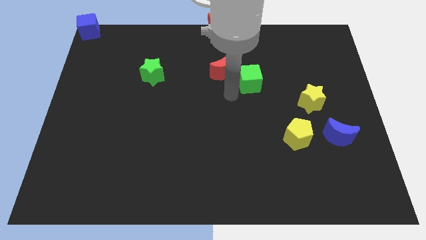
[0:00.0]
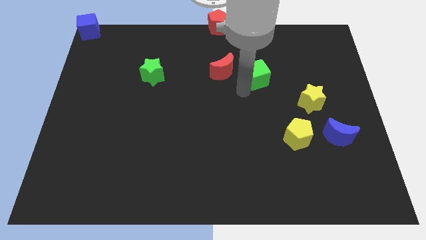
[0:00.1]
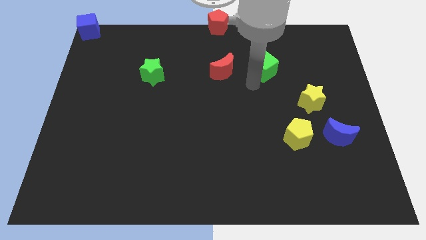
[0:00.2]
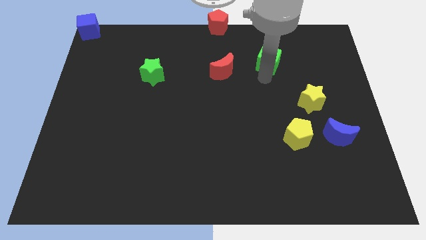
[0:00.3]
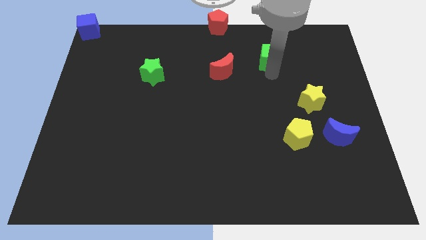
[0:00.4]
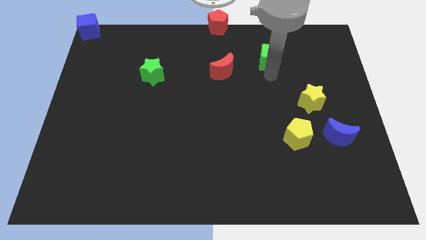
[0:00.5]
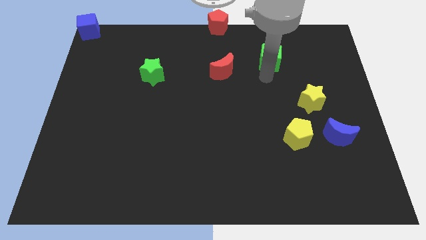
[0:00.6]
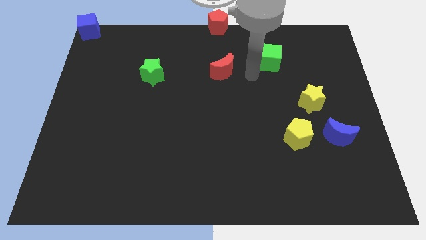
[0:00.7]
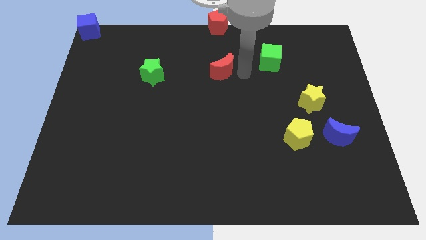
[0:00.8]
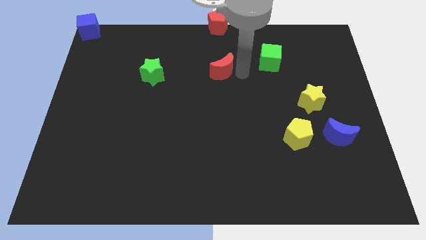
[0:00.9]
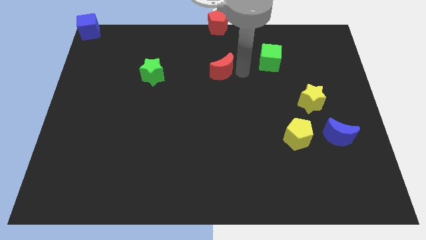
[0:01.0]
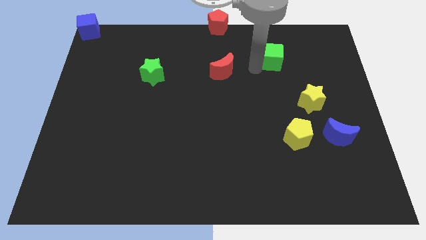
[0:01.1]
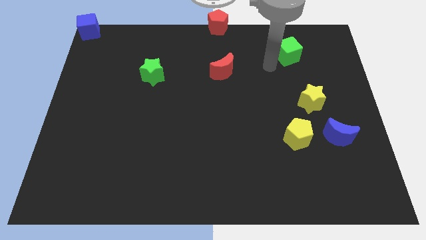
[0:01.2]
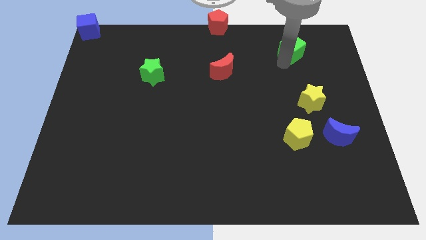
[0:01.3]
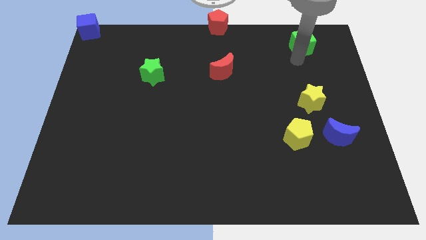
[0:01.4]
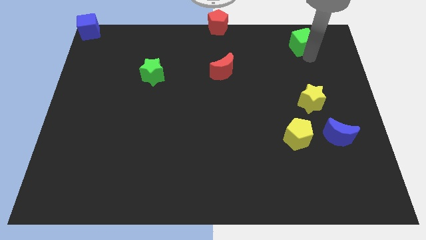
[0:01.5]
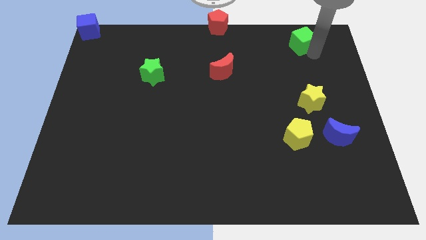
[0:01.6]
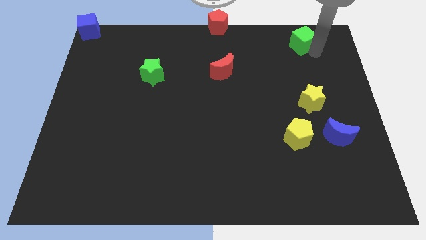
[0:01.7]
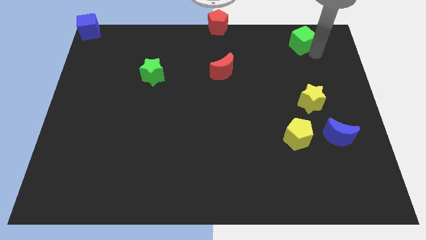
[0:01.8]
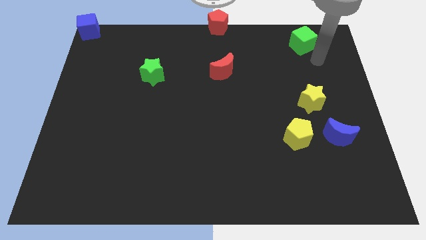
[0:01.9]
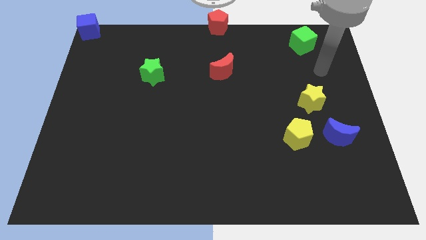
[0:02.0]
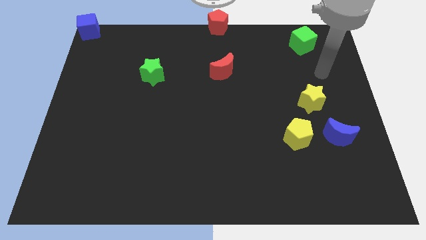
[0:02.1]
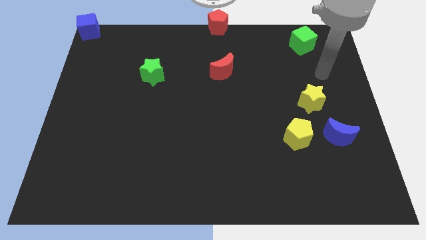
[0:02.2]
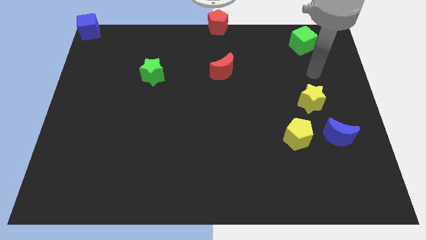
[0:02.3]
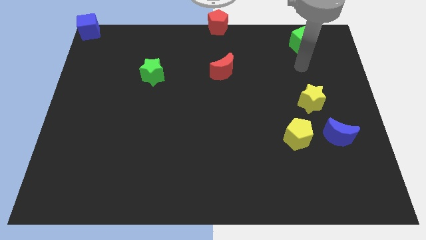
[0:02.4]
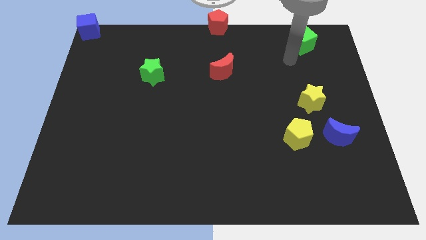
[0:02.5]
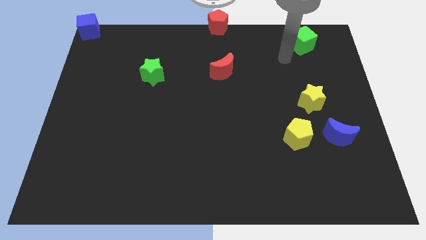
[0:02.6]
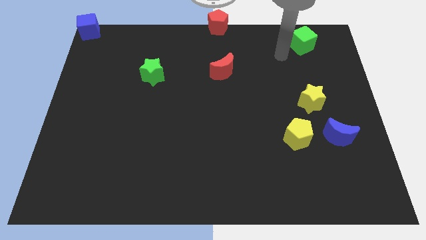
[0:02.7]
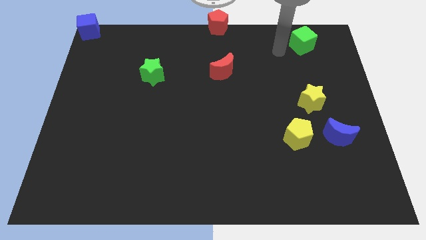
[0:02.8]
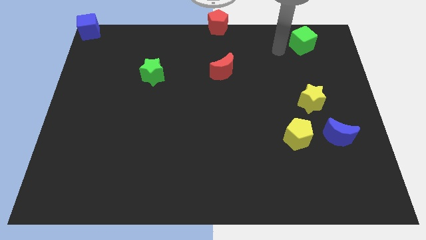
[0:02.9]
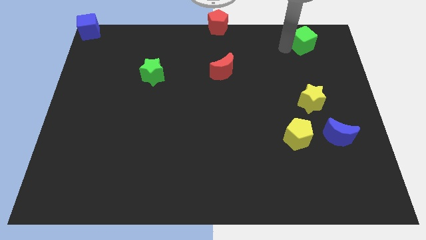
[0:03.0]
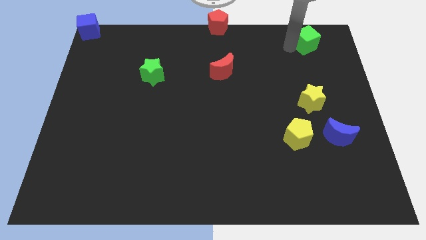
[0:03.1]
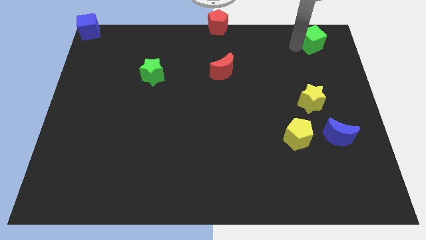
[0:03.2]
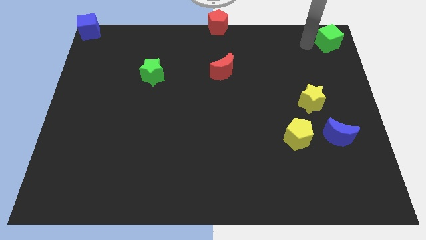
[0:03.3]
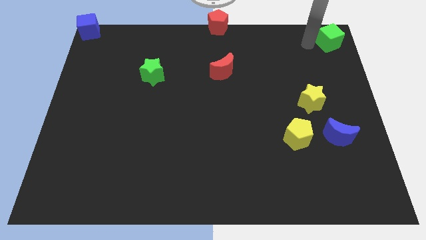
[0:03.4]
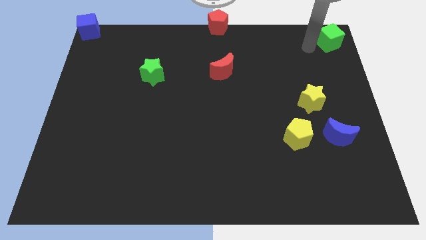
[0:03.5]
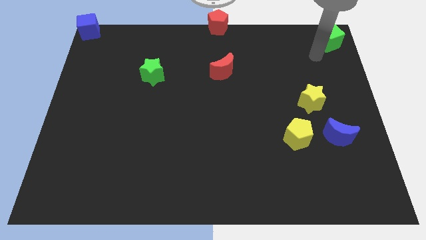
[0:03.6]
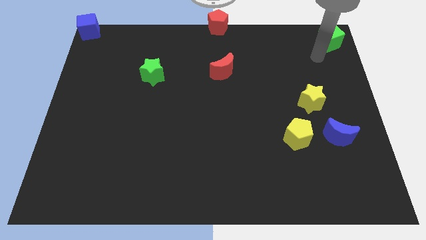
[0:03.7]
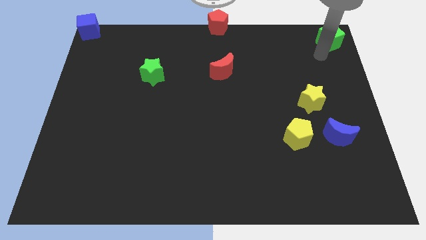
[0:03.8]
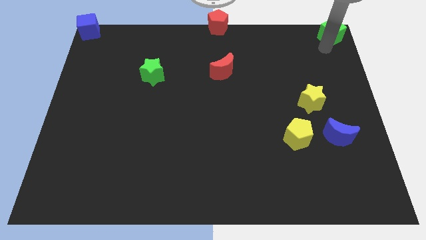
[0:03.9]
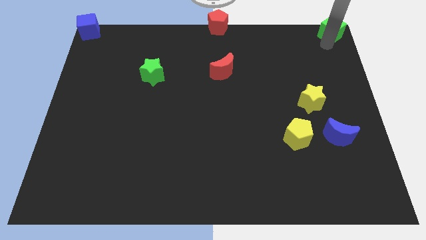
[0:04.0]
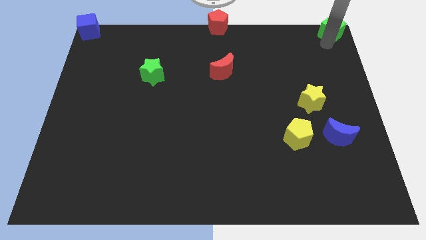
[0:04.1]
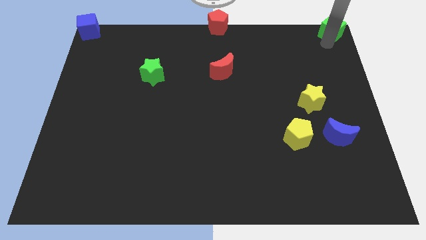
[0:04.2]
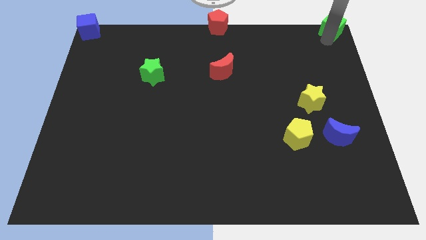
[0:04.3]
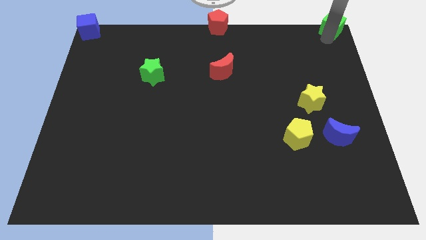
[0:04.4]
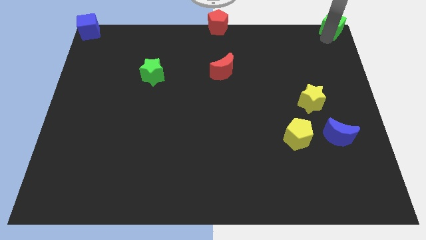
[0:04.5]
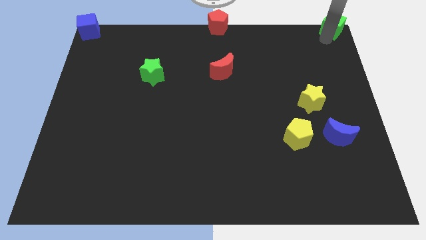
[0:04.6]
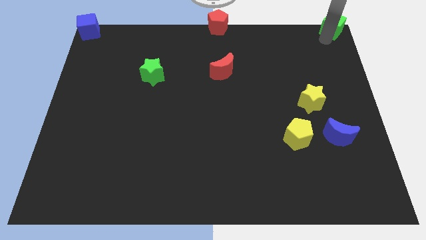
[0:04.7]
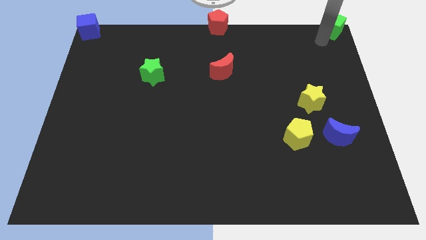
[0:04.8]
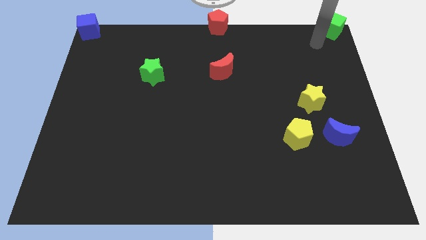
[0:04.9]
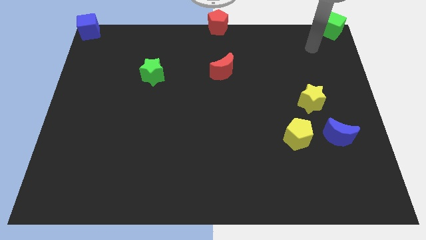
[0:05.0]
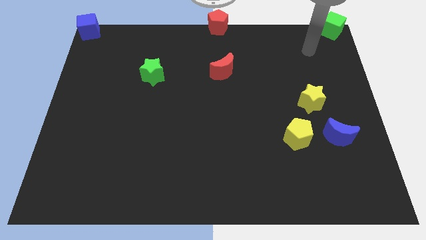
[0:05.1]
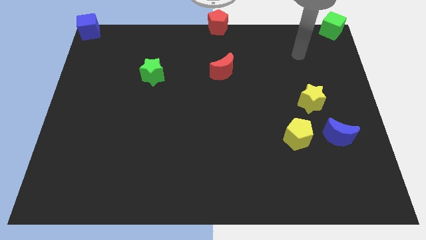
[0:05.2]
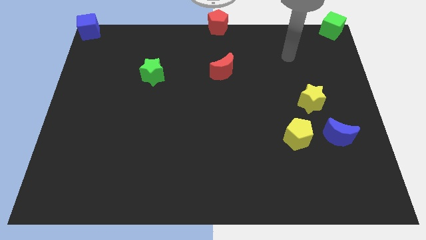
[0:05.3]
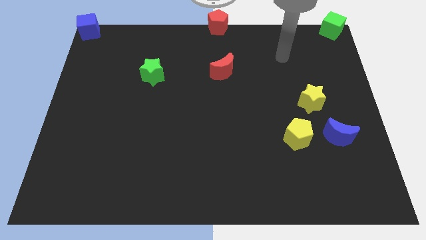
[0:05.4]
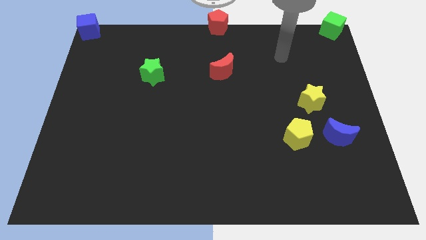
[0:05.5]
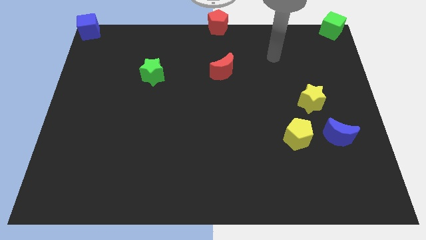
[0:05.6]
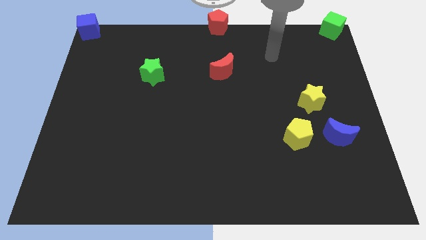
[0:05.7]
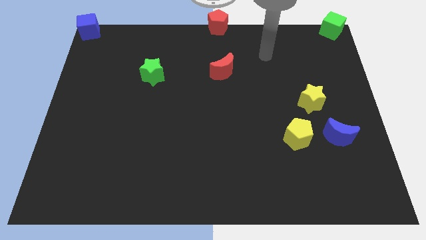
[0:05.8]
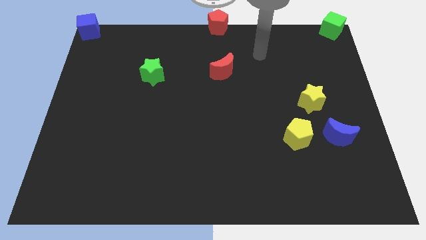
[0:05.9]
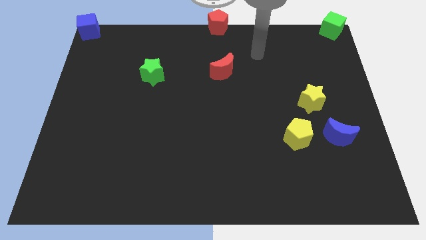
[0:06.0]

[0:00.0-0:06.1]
move the green cube upper right corner of the board

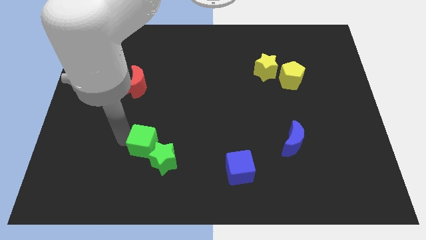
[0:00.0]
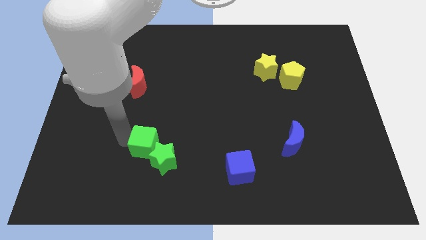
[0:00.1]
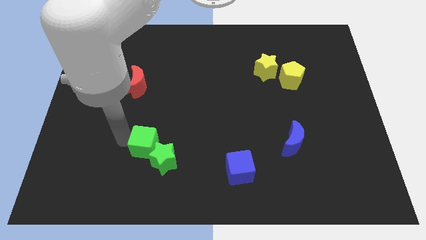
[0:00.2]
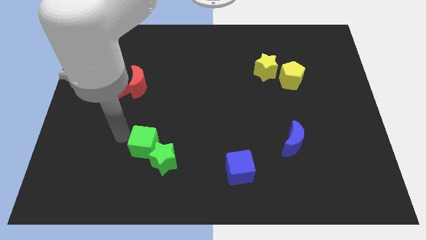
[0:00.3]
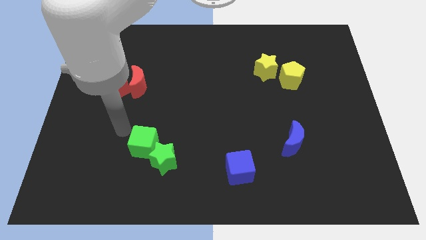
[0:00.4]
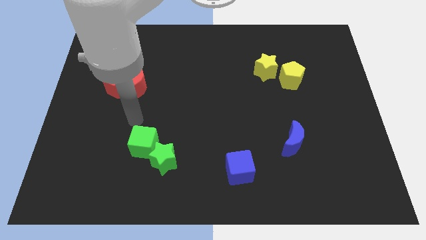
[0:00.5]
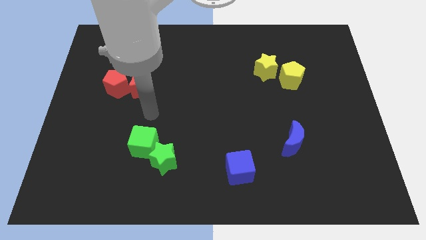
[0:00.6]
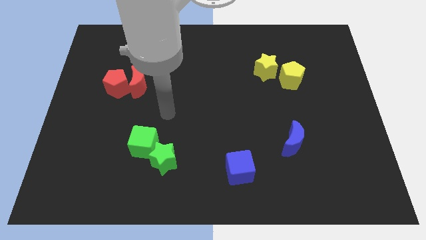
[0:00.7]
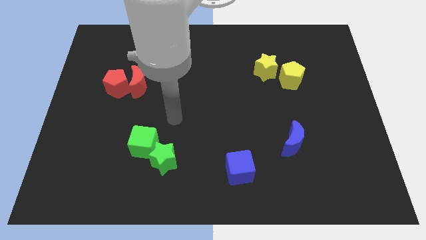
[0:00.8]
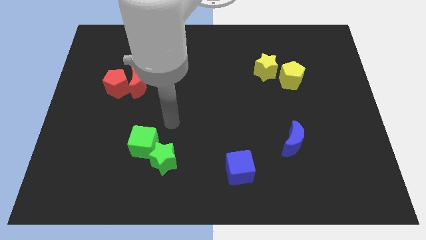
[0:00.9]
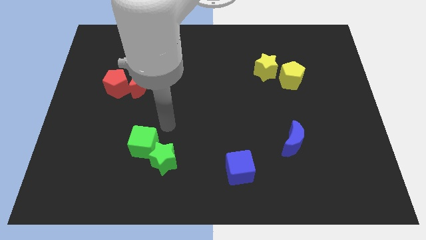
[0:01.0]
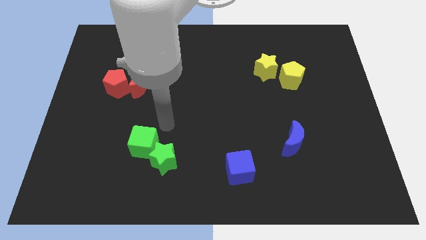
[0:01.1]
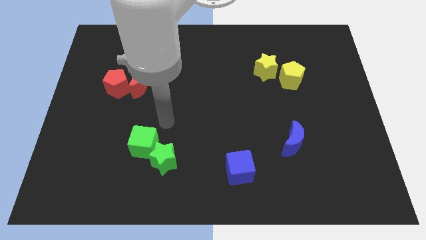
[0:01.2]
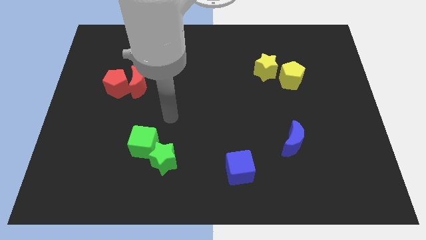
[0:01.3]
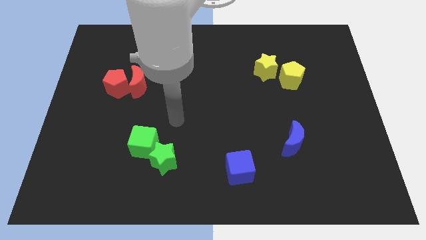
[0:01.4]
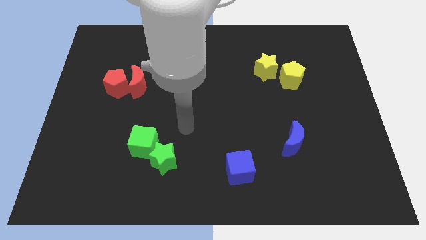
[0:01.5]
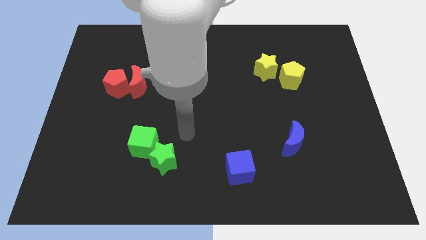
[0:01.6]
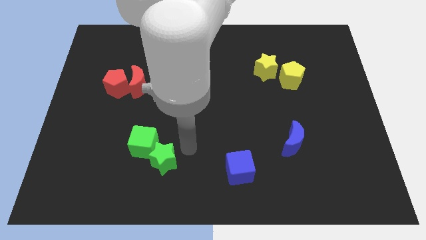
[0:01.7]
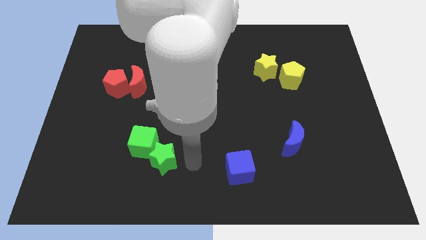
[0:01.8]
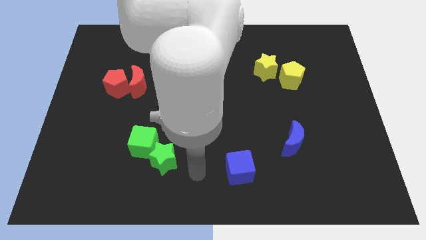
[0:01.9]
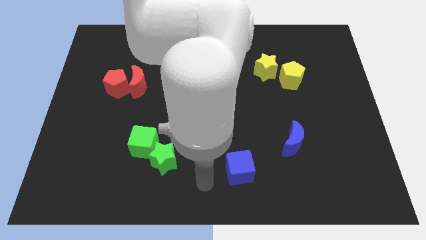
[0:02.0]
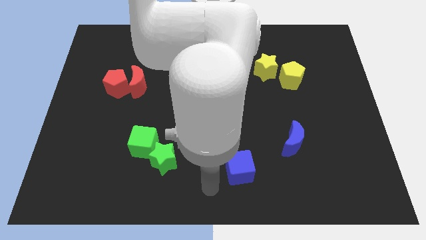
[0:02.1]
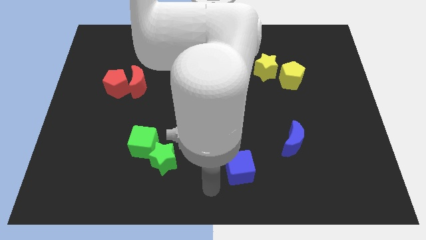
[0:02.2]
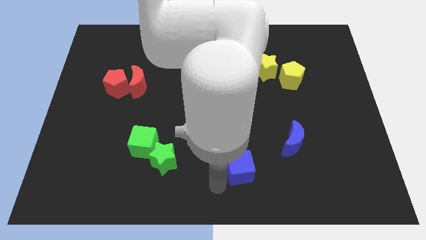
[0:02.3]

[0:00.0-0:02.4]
move your arm to the left of the blue cube

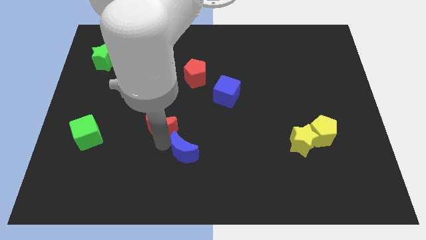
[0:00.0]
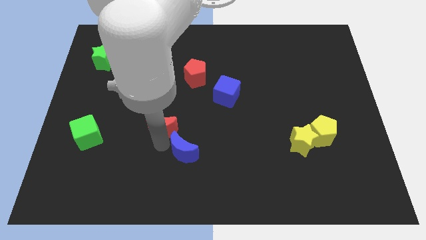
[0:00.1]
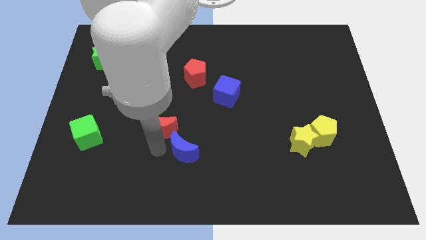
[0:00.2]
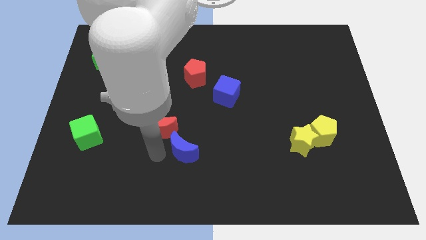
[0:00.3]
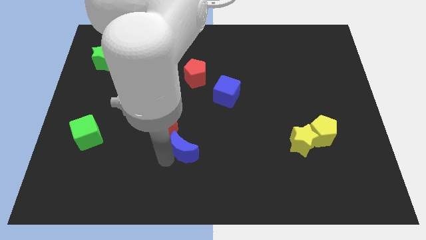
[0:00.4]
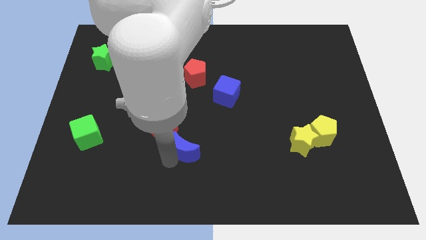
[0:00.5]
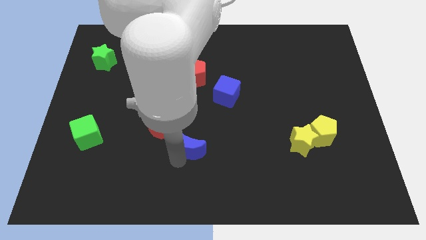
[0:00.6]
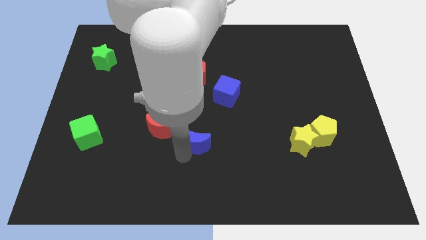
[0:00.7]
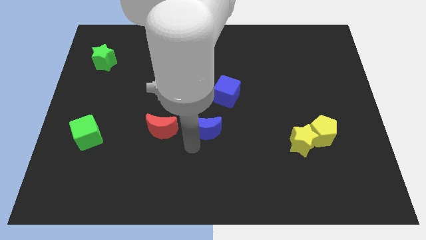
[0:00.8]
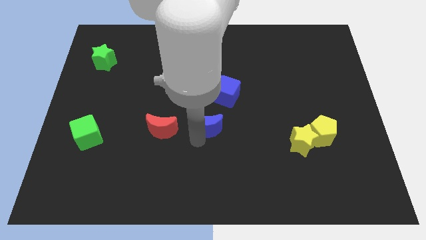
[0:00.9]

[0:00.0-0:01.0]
place the blue moon to the right of the red moon
